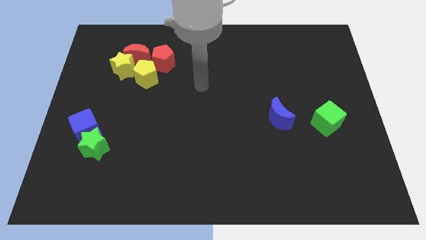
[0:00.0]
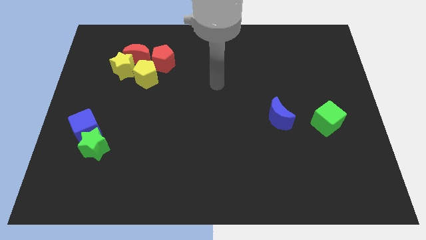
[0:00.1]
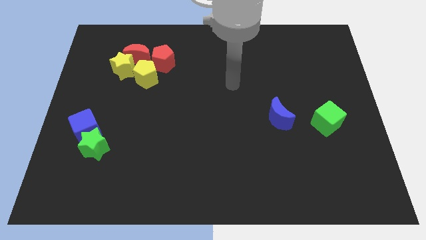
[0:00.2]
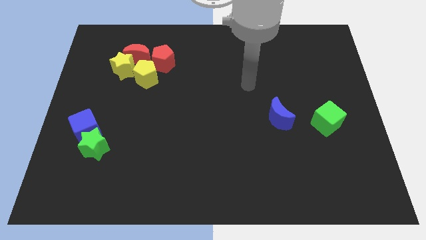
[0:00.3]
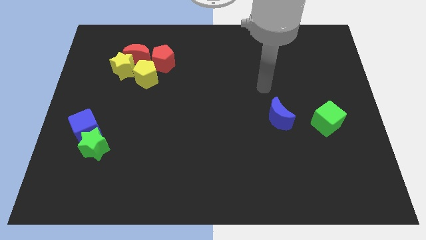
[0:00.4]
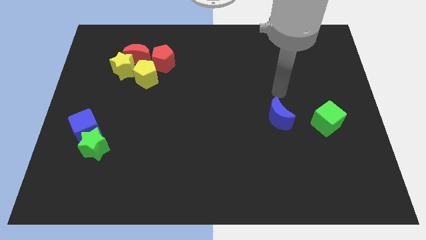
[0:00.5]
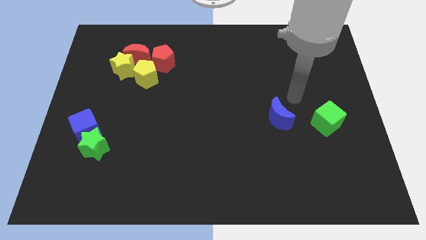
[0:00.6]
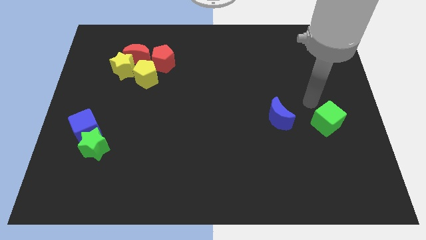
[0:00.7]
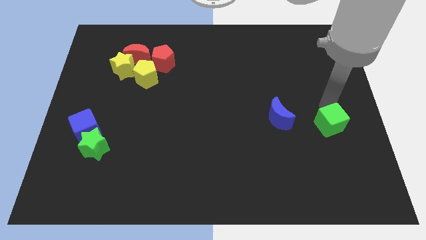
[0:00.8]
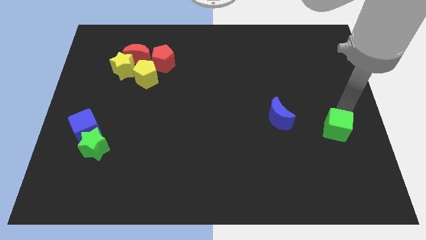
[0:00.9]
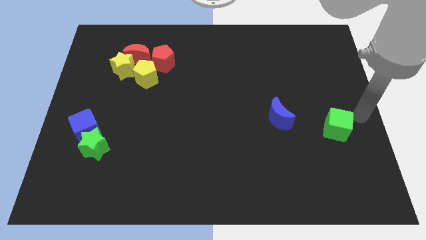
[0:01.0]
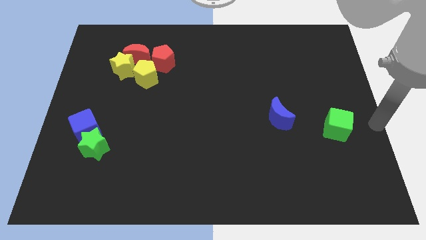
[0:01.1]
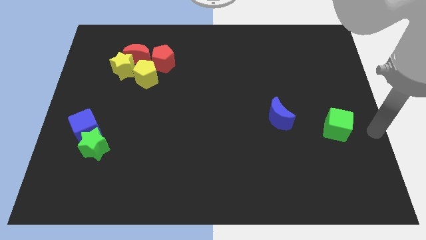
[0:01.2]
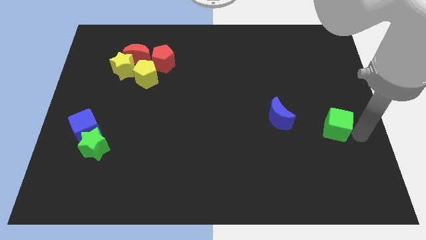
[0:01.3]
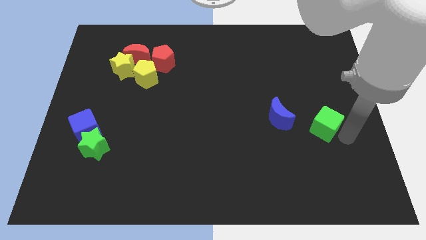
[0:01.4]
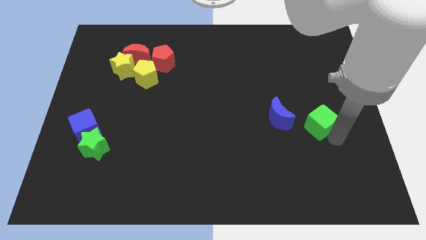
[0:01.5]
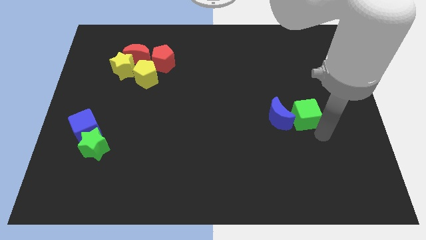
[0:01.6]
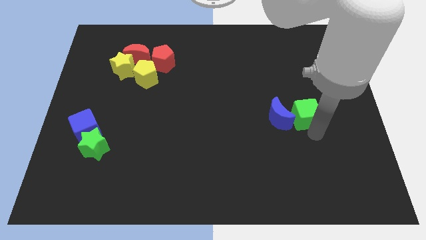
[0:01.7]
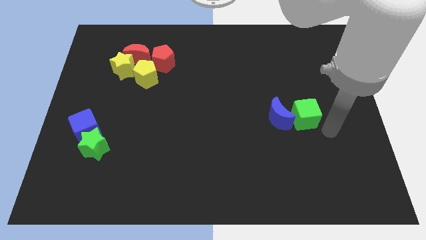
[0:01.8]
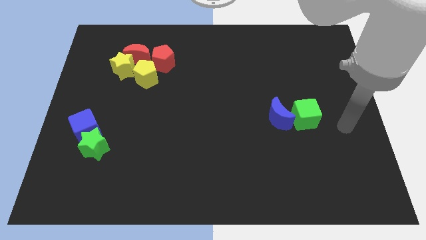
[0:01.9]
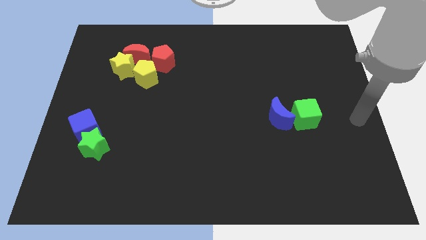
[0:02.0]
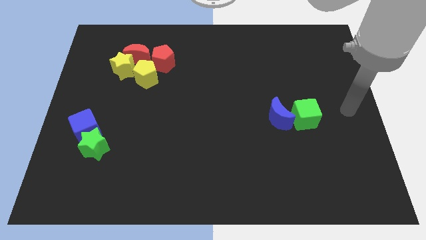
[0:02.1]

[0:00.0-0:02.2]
move the green cube into the blue moon

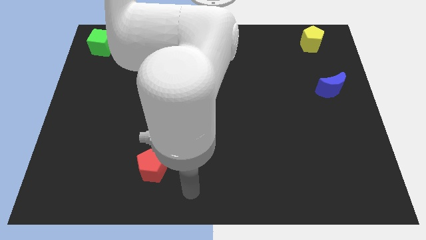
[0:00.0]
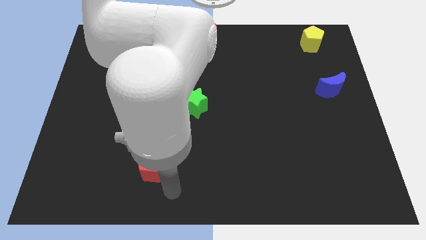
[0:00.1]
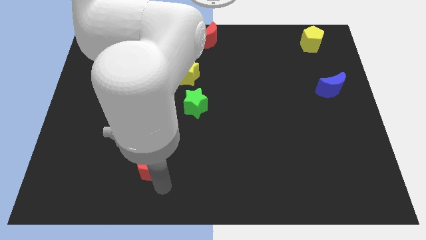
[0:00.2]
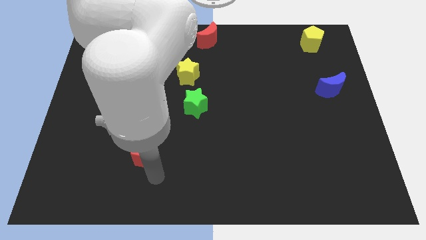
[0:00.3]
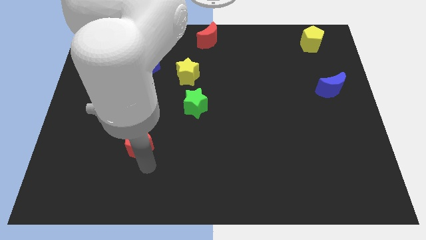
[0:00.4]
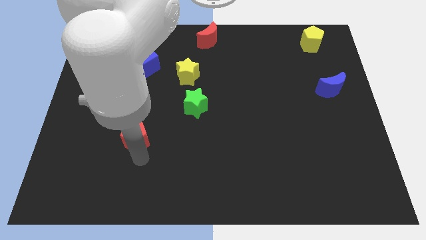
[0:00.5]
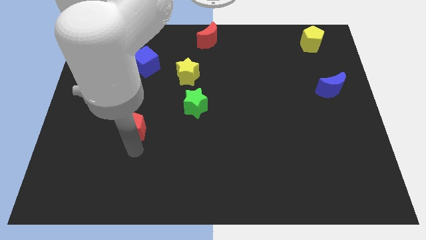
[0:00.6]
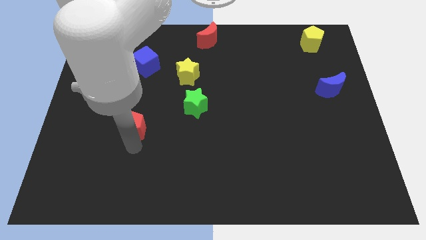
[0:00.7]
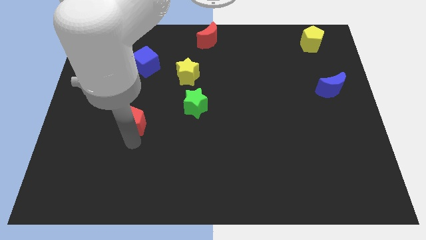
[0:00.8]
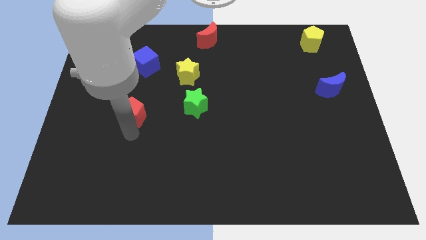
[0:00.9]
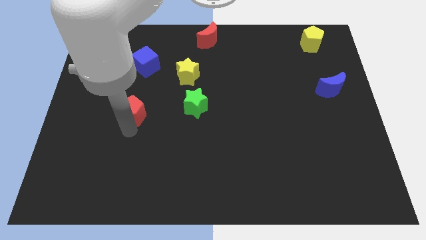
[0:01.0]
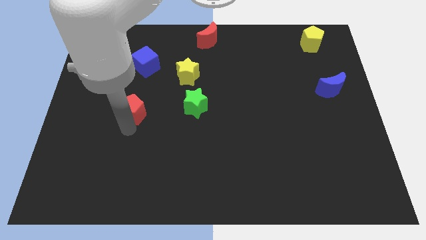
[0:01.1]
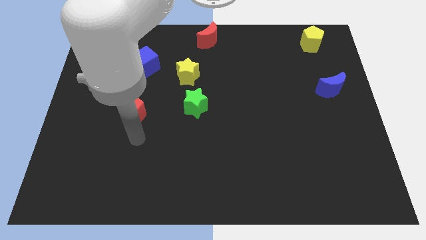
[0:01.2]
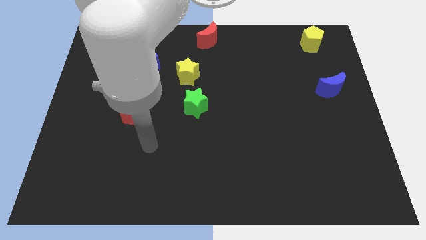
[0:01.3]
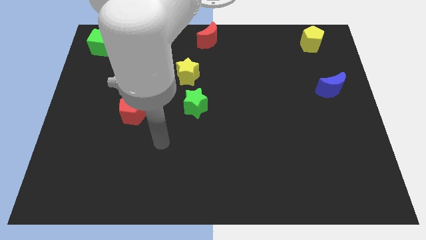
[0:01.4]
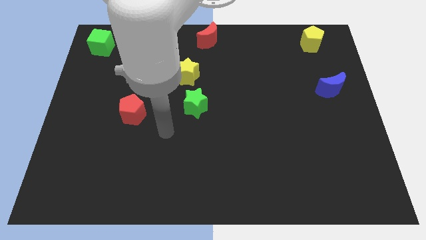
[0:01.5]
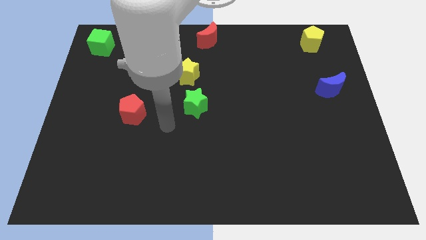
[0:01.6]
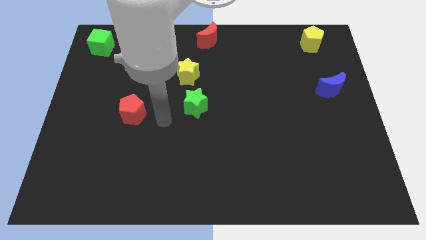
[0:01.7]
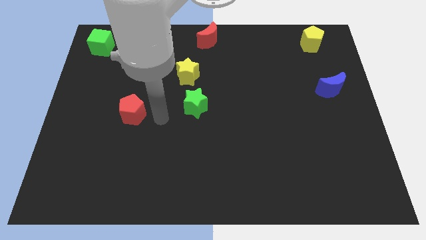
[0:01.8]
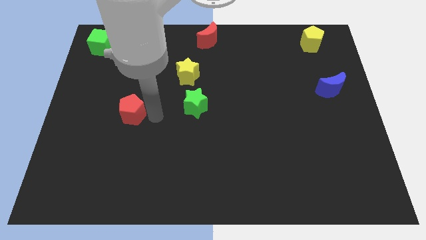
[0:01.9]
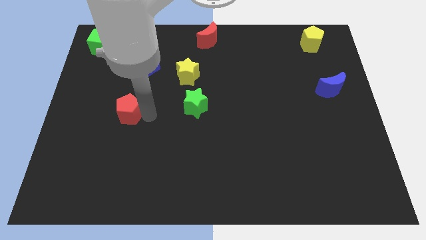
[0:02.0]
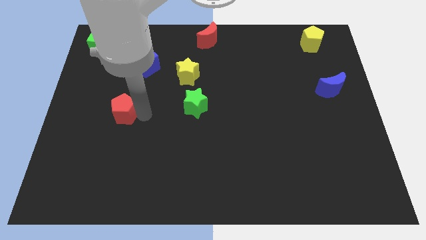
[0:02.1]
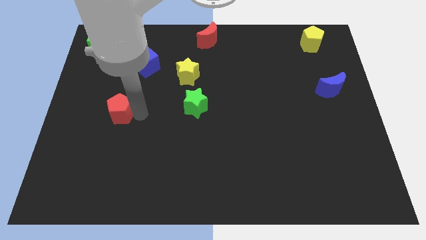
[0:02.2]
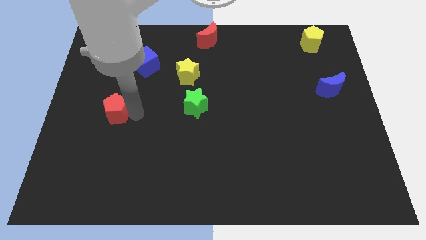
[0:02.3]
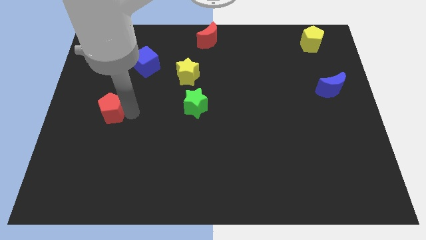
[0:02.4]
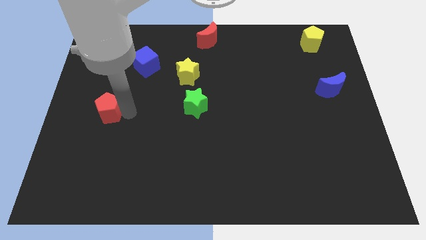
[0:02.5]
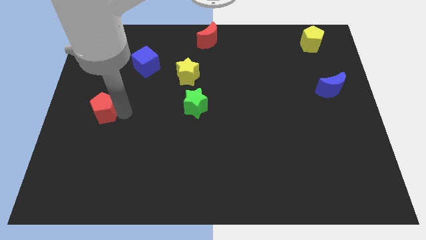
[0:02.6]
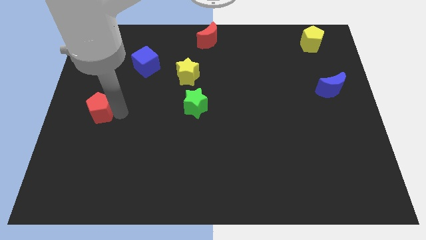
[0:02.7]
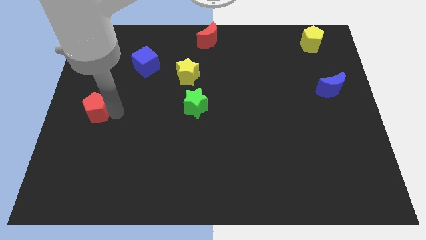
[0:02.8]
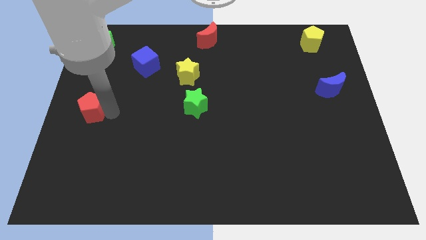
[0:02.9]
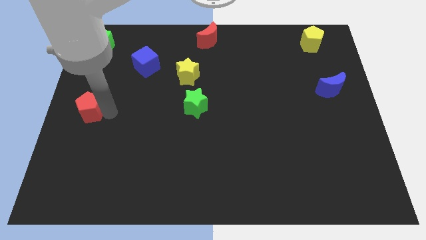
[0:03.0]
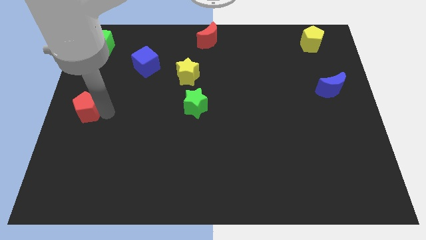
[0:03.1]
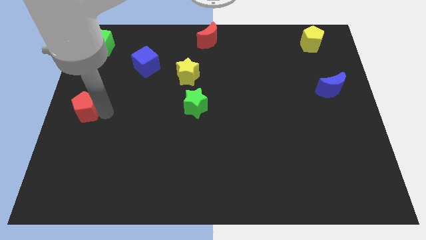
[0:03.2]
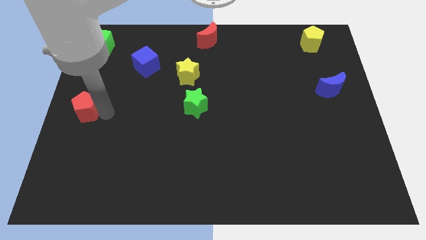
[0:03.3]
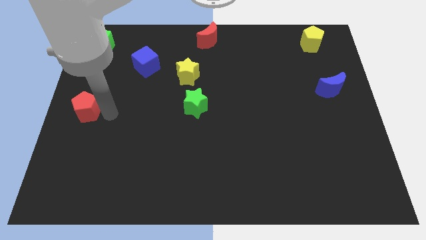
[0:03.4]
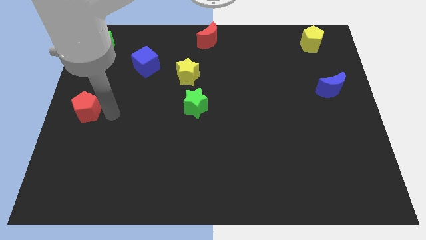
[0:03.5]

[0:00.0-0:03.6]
move the red pentagon towards the center left of the board

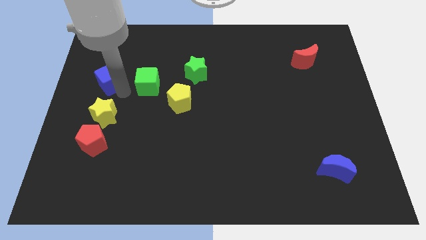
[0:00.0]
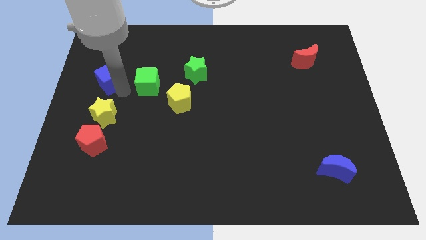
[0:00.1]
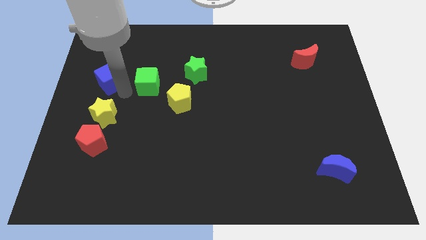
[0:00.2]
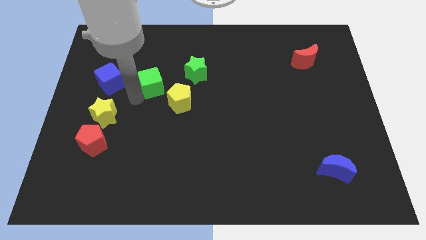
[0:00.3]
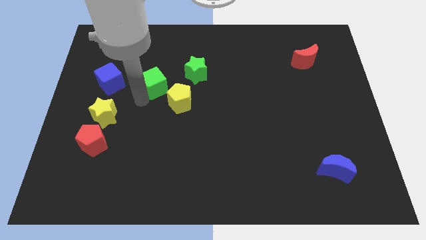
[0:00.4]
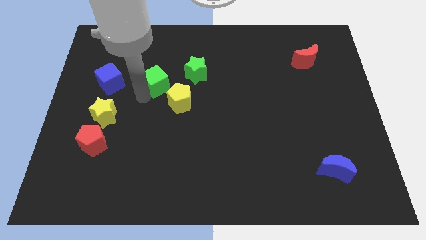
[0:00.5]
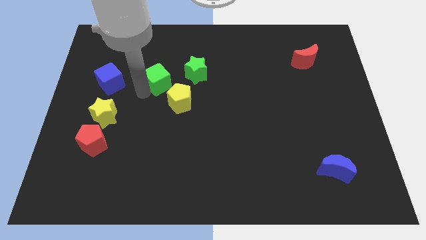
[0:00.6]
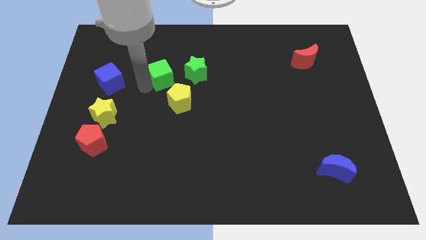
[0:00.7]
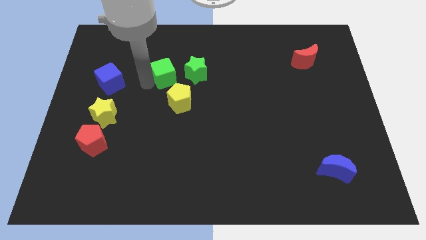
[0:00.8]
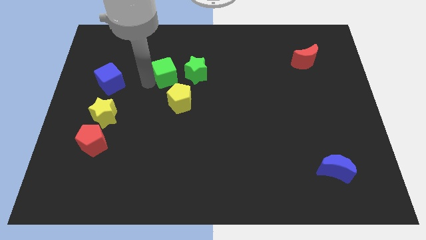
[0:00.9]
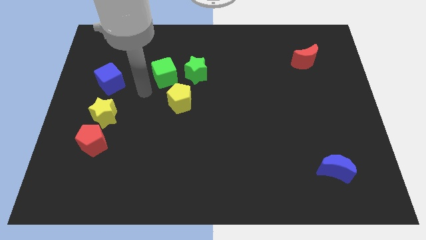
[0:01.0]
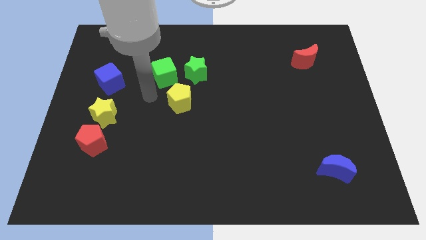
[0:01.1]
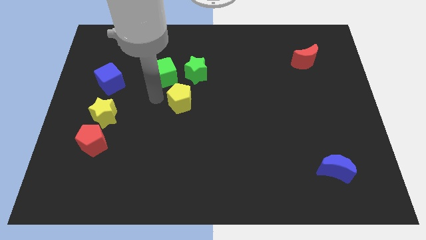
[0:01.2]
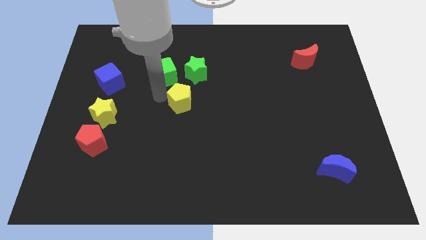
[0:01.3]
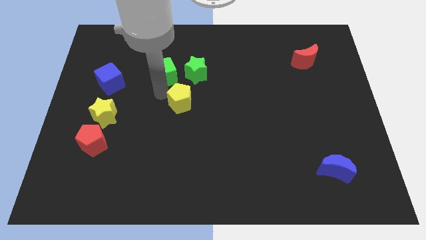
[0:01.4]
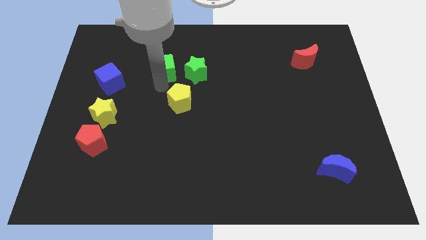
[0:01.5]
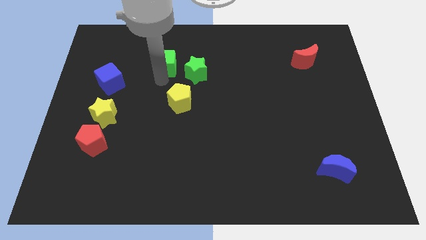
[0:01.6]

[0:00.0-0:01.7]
place the green cube left to the green star

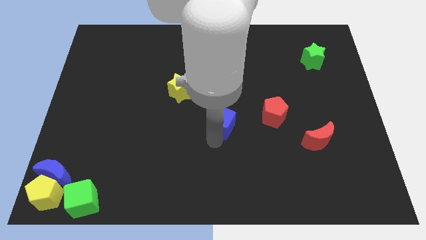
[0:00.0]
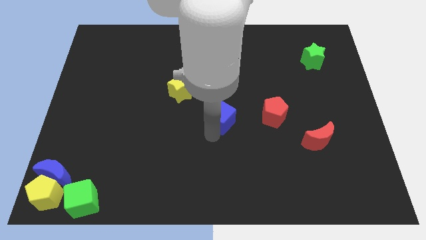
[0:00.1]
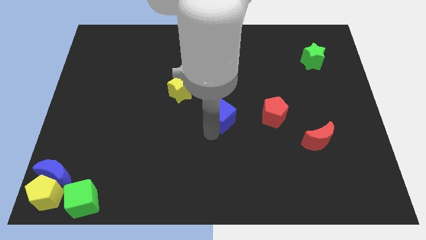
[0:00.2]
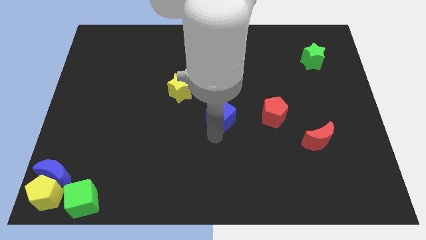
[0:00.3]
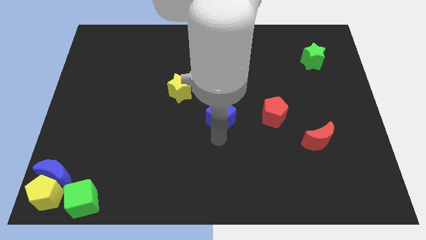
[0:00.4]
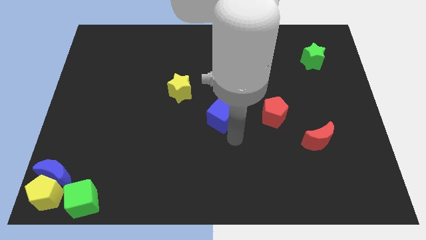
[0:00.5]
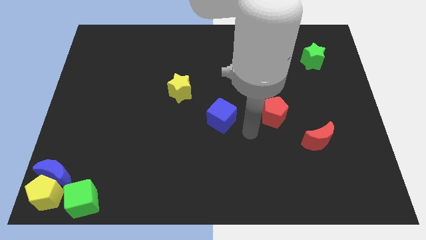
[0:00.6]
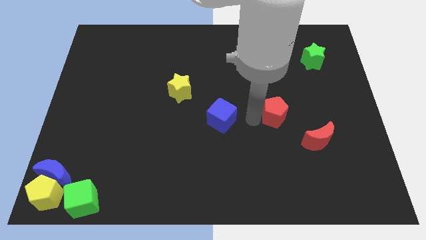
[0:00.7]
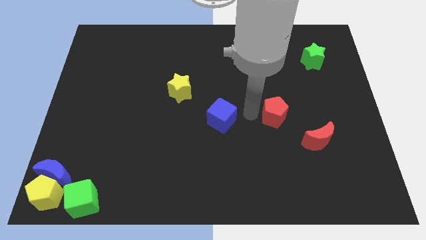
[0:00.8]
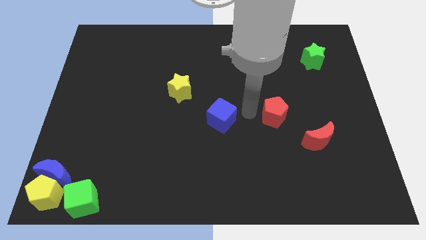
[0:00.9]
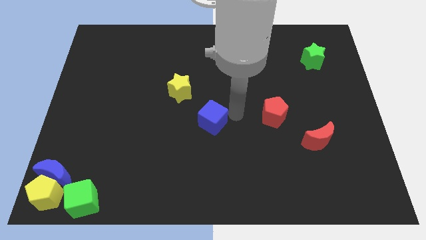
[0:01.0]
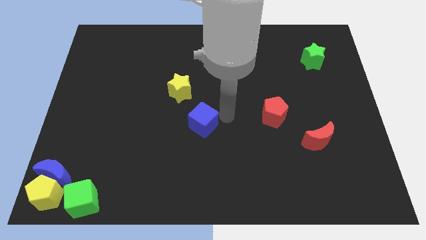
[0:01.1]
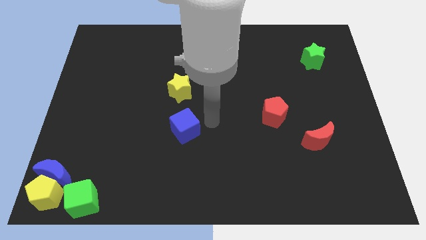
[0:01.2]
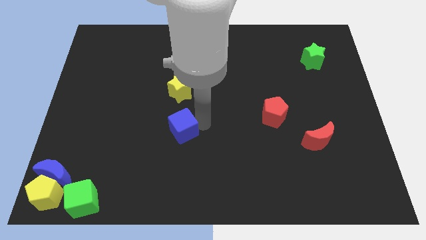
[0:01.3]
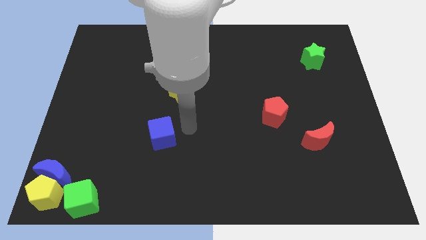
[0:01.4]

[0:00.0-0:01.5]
place blue cube to the bottom of yellow star
